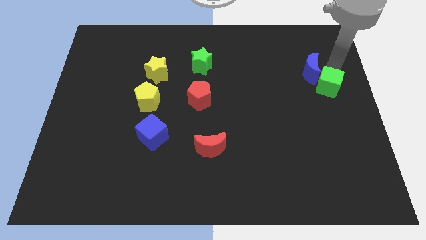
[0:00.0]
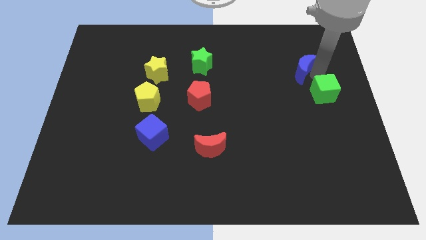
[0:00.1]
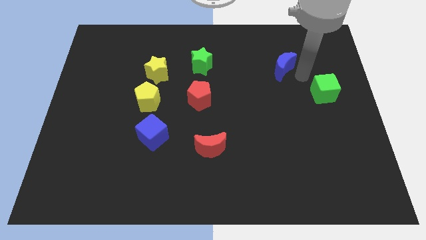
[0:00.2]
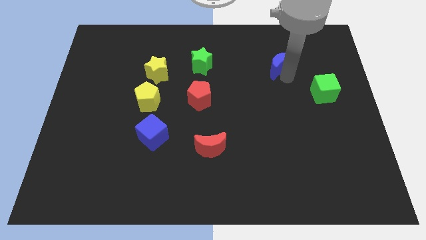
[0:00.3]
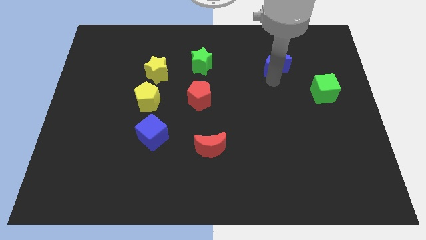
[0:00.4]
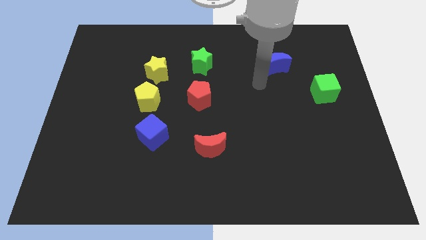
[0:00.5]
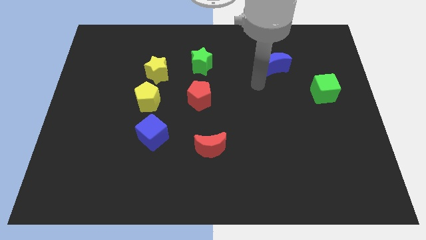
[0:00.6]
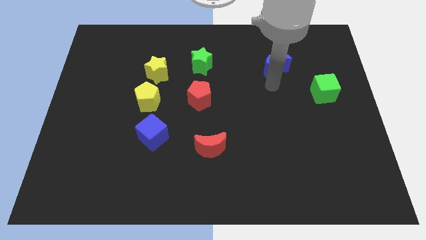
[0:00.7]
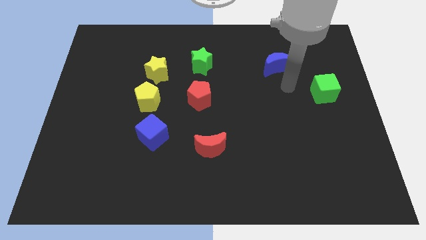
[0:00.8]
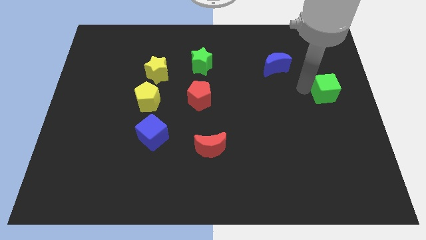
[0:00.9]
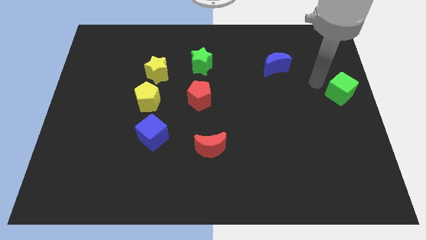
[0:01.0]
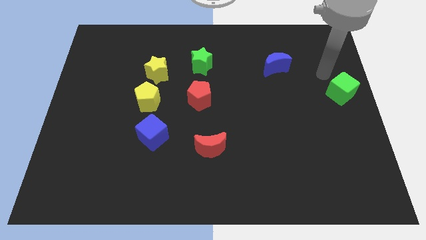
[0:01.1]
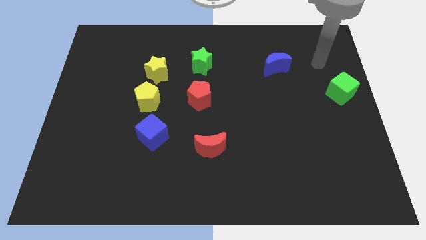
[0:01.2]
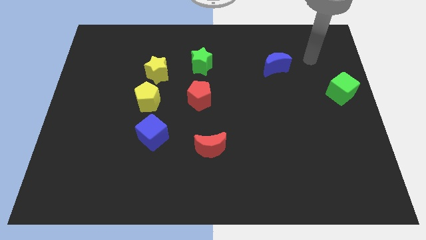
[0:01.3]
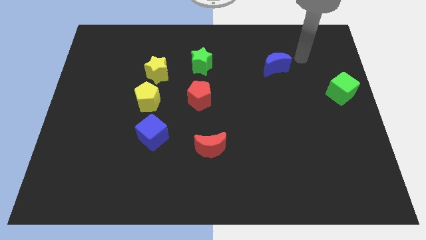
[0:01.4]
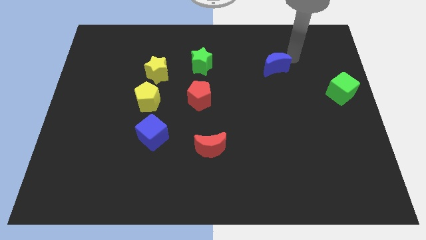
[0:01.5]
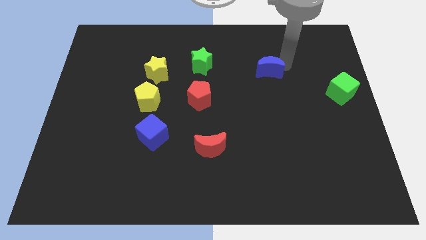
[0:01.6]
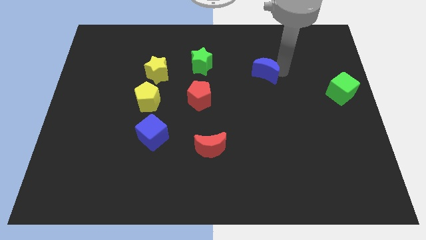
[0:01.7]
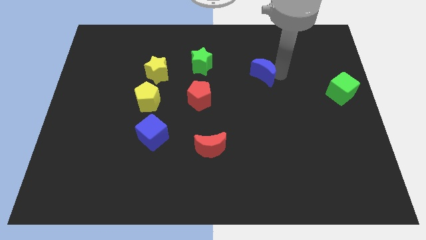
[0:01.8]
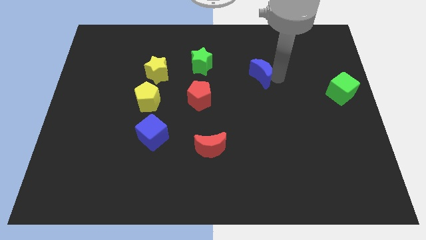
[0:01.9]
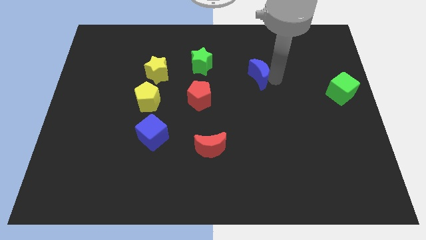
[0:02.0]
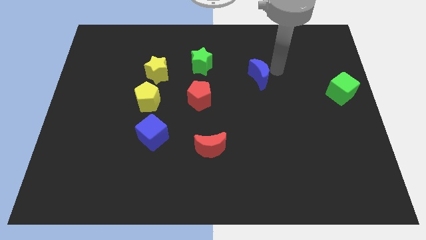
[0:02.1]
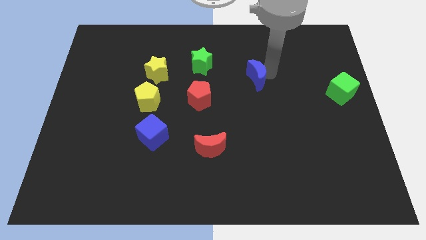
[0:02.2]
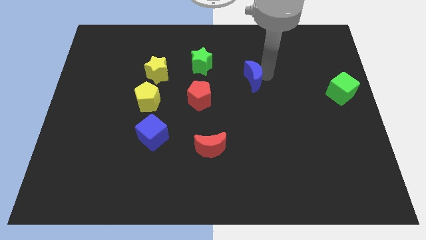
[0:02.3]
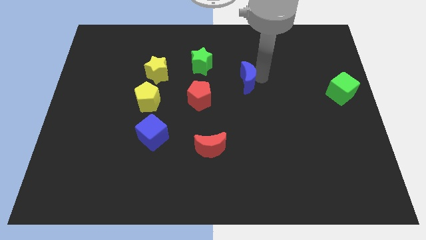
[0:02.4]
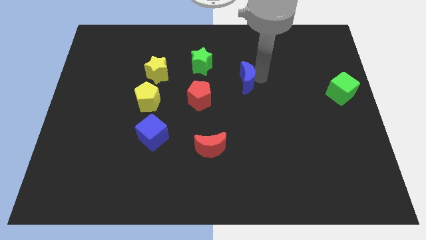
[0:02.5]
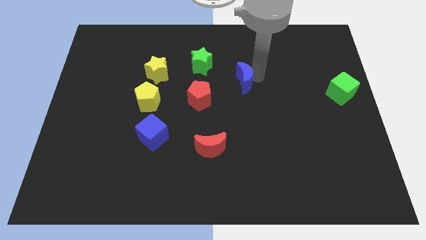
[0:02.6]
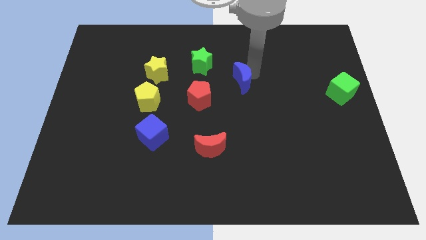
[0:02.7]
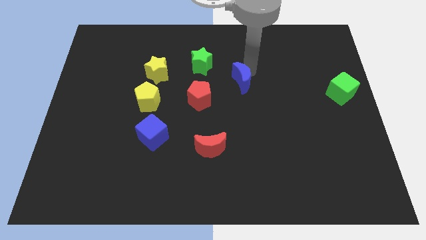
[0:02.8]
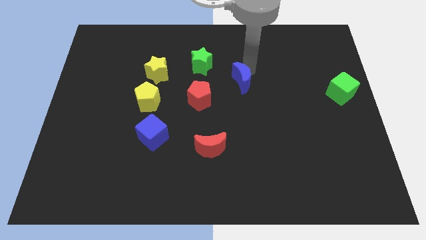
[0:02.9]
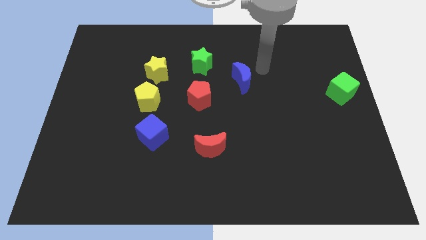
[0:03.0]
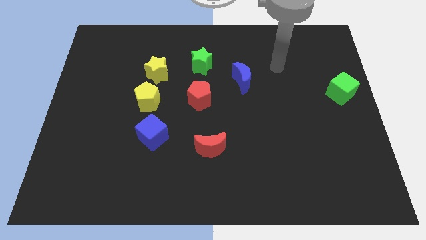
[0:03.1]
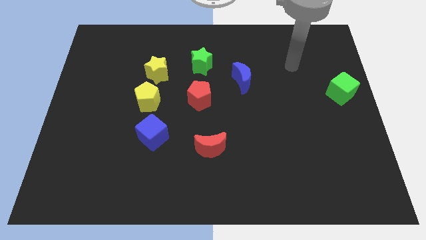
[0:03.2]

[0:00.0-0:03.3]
push the blue crescent towards the left of the board

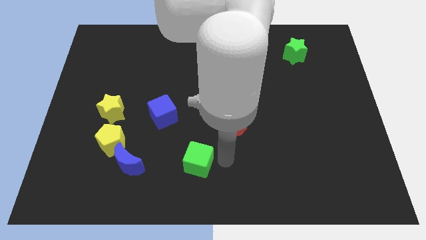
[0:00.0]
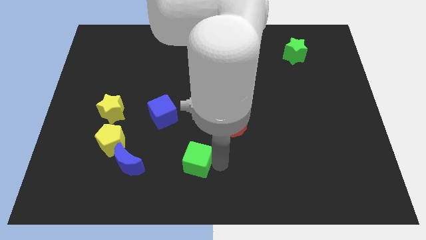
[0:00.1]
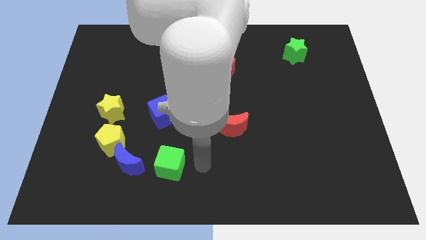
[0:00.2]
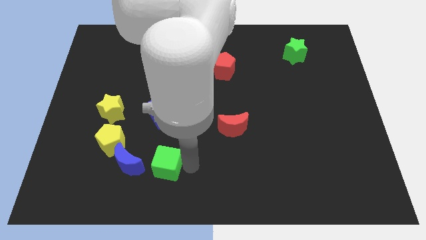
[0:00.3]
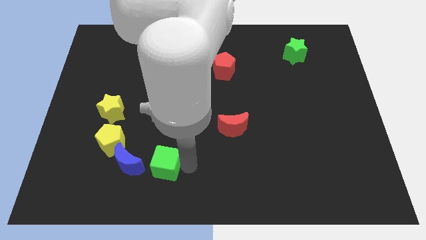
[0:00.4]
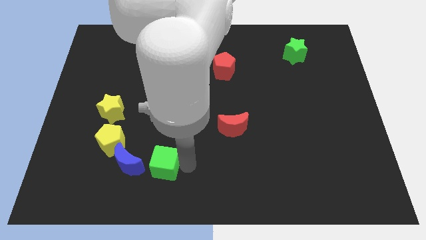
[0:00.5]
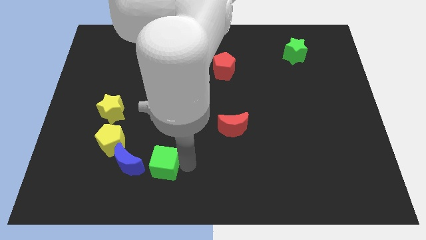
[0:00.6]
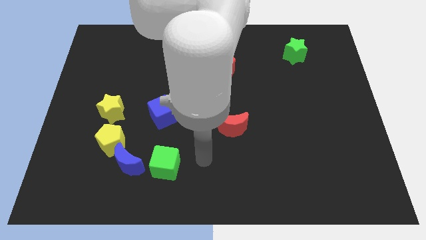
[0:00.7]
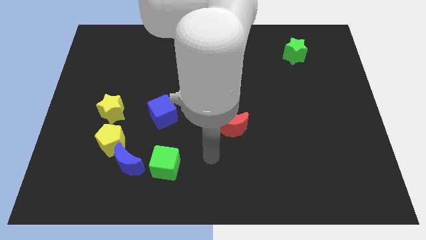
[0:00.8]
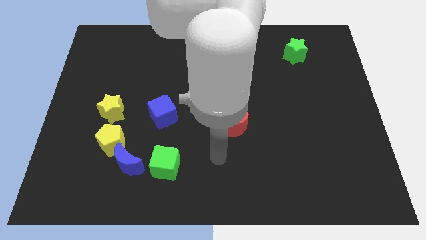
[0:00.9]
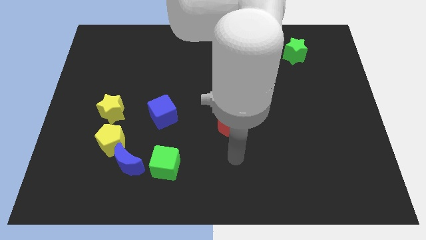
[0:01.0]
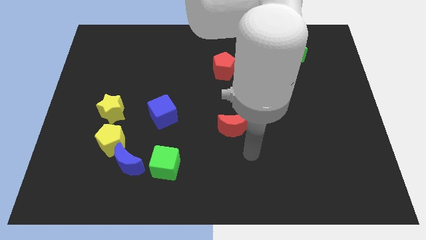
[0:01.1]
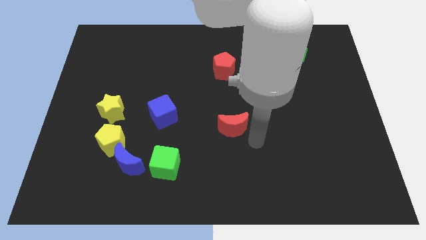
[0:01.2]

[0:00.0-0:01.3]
move green cube towards blue moon

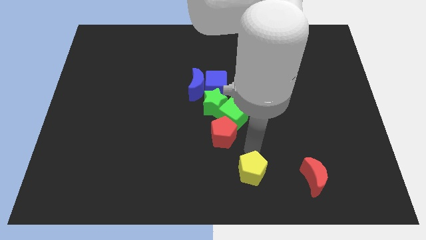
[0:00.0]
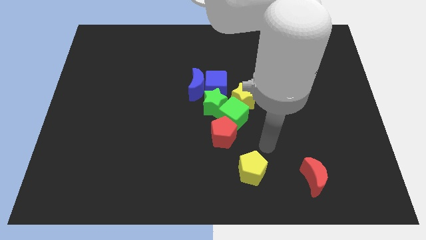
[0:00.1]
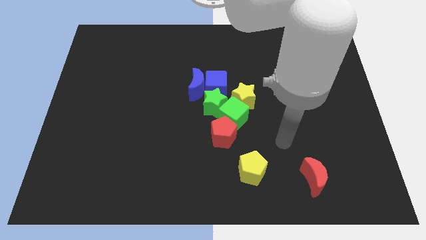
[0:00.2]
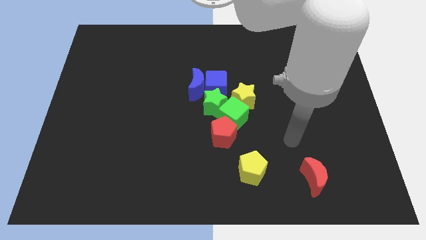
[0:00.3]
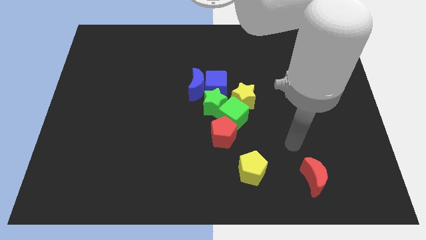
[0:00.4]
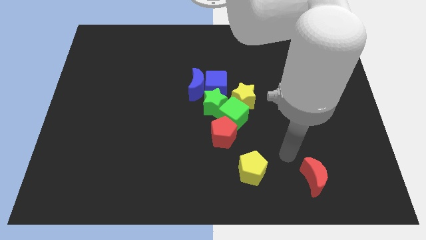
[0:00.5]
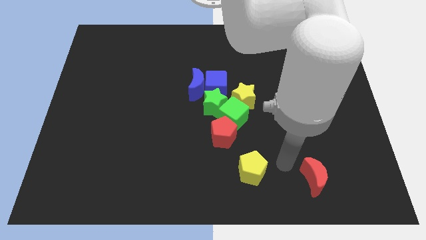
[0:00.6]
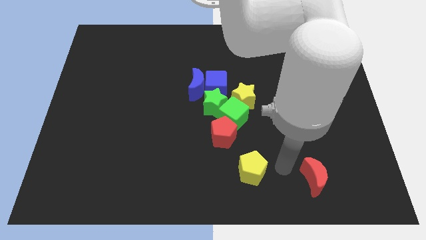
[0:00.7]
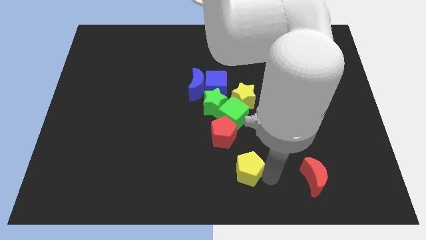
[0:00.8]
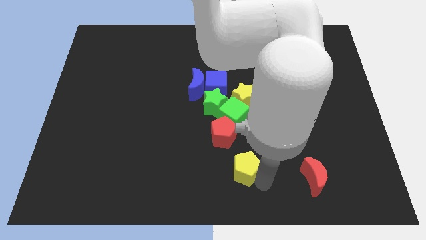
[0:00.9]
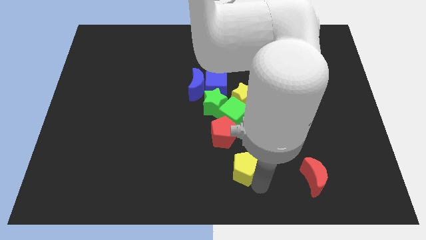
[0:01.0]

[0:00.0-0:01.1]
place the yellow pentagon to the left of red moon

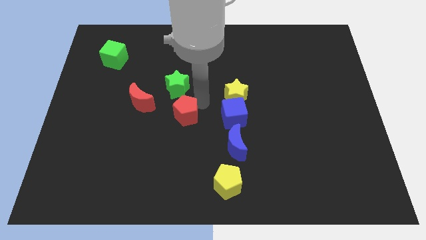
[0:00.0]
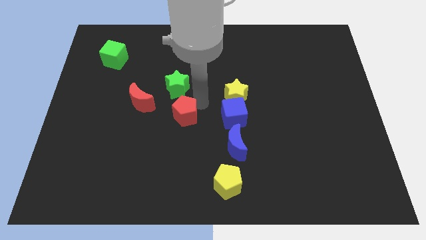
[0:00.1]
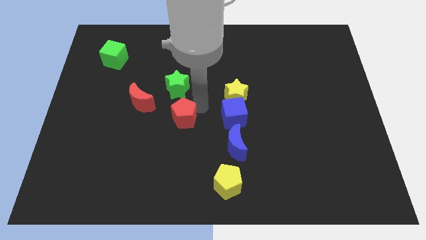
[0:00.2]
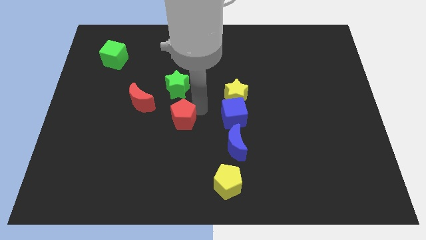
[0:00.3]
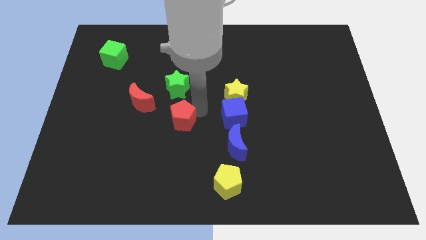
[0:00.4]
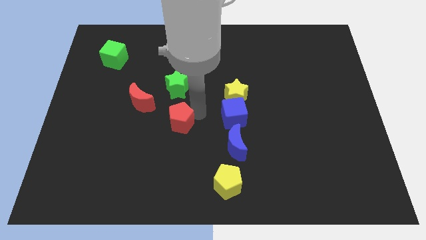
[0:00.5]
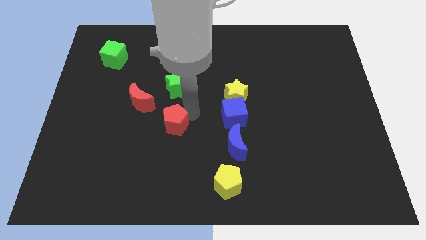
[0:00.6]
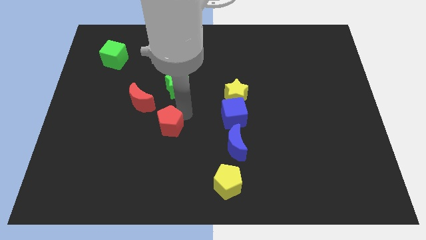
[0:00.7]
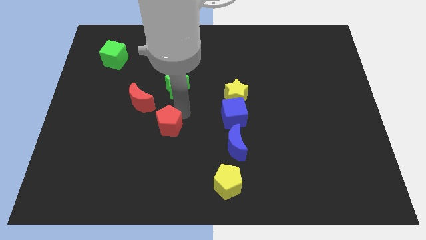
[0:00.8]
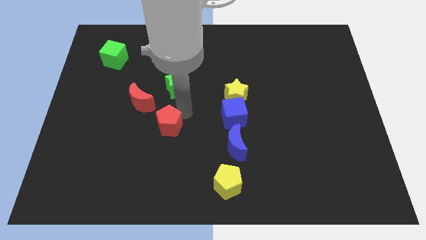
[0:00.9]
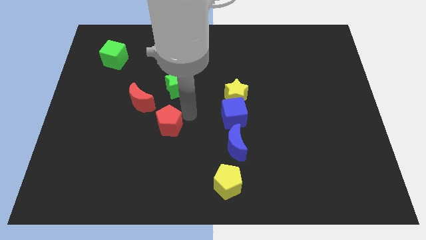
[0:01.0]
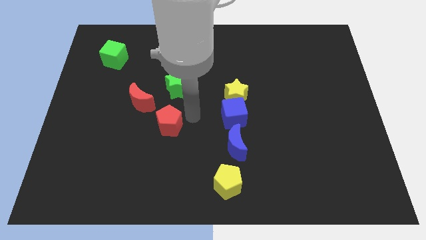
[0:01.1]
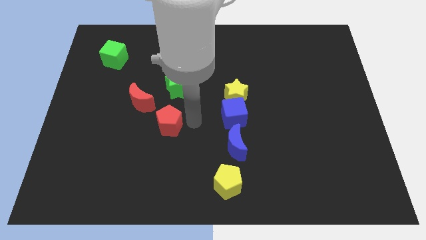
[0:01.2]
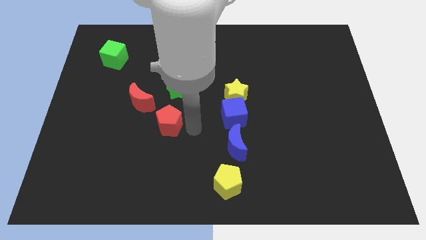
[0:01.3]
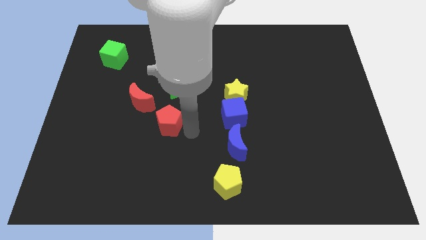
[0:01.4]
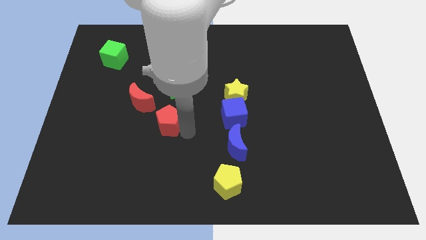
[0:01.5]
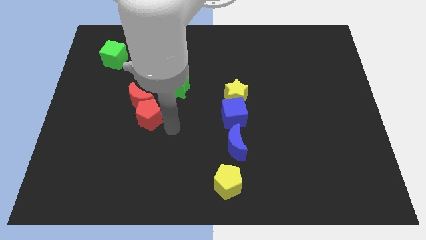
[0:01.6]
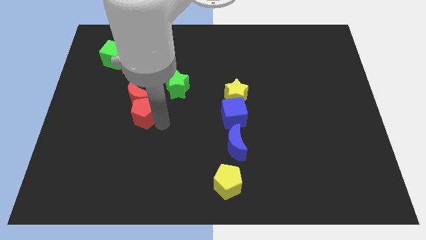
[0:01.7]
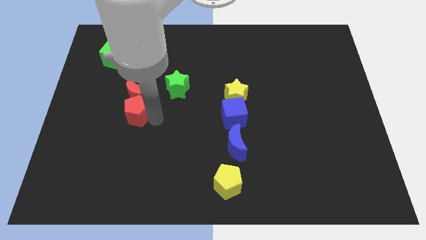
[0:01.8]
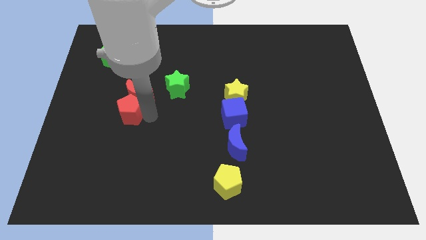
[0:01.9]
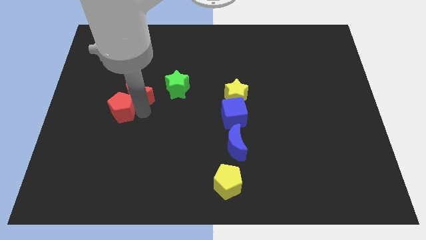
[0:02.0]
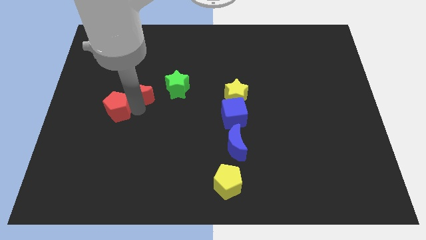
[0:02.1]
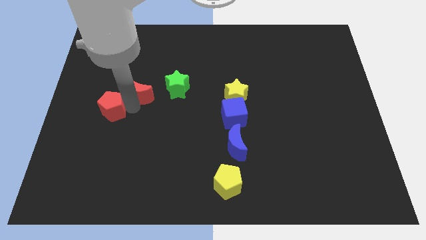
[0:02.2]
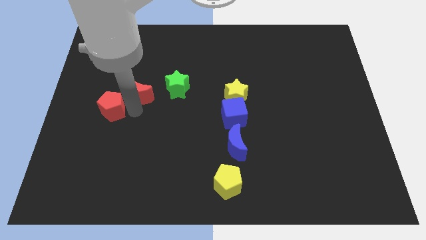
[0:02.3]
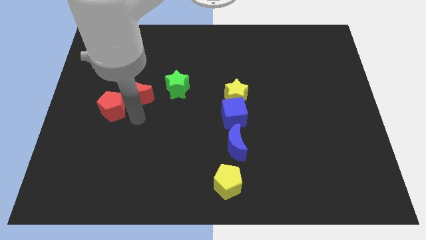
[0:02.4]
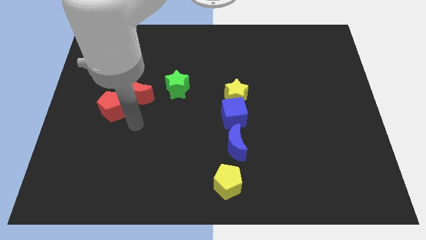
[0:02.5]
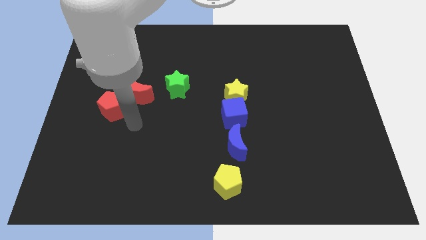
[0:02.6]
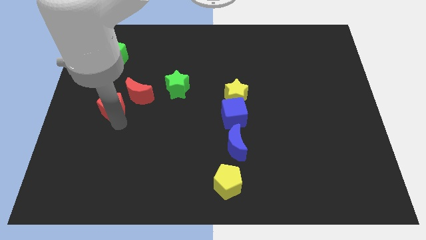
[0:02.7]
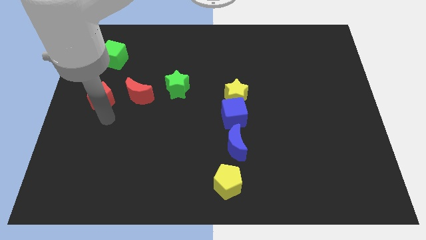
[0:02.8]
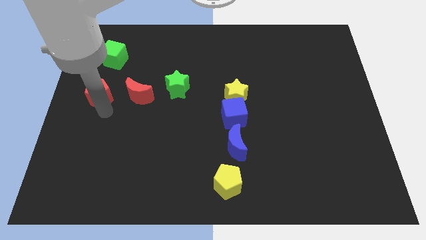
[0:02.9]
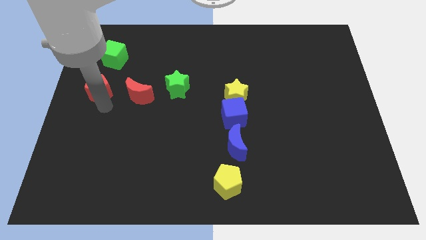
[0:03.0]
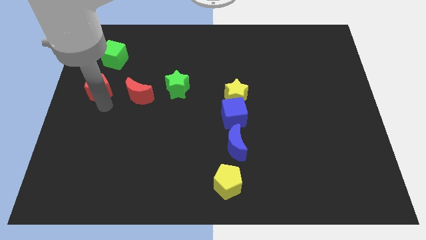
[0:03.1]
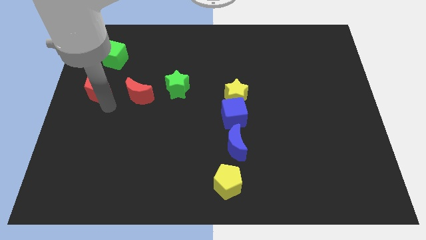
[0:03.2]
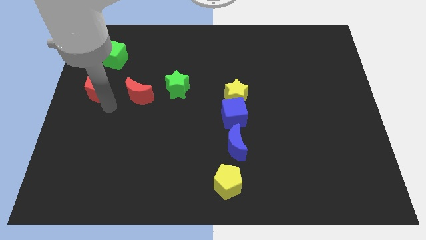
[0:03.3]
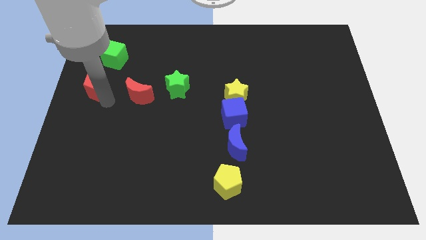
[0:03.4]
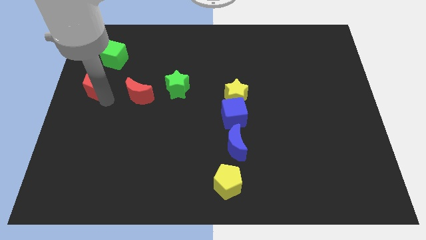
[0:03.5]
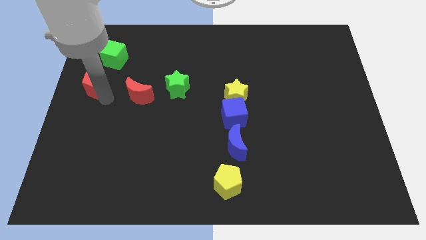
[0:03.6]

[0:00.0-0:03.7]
place the red pentagon to the center left
